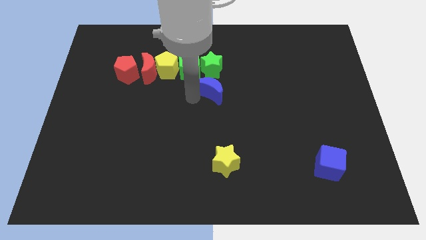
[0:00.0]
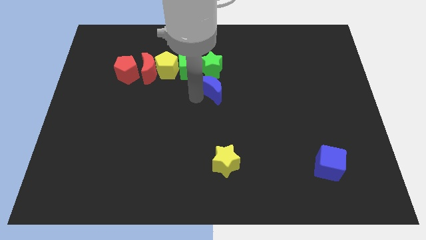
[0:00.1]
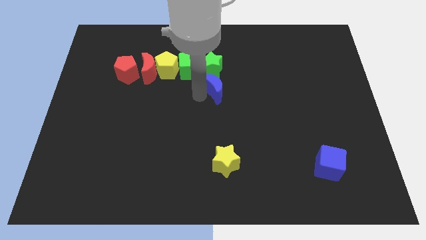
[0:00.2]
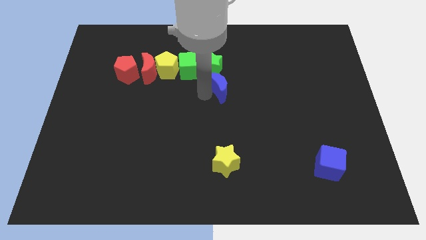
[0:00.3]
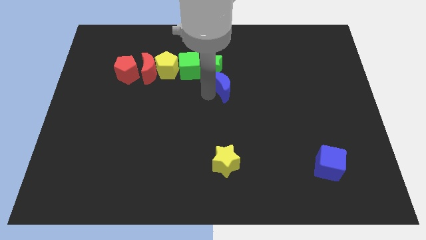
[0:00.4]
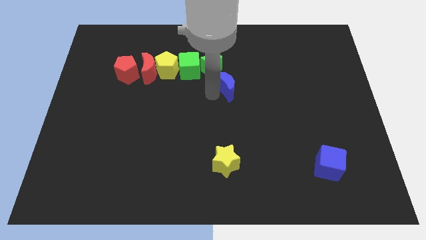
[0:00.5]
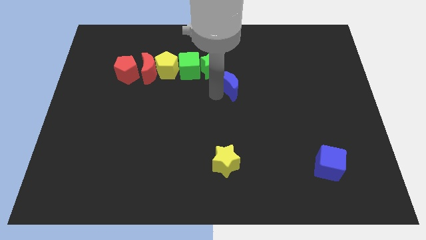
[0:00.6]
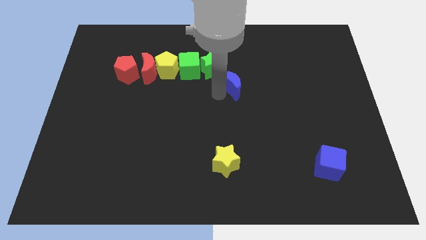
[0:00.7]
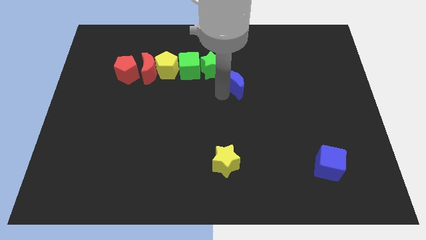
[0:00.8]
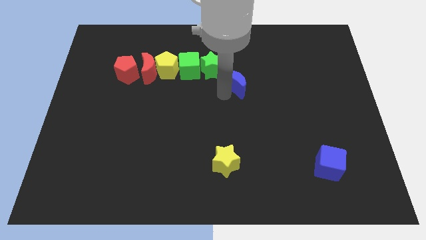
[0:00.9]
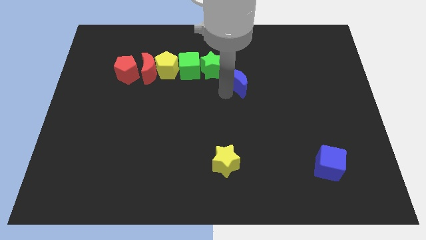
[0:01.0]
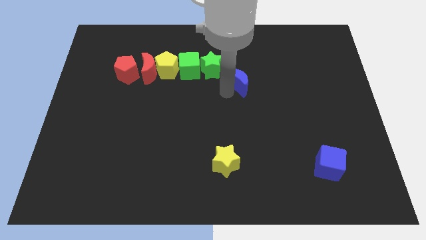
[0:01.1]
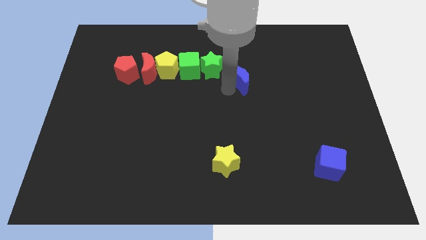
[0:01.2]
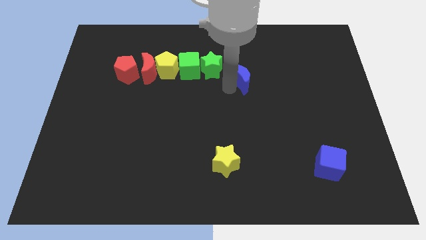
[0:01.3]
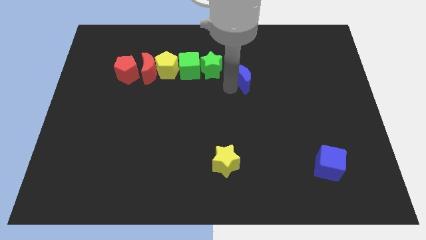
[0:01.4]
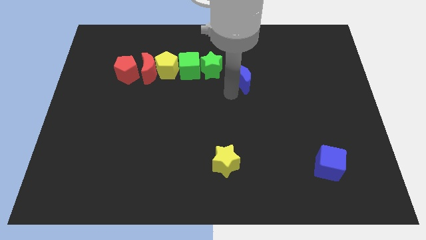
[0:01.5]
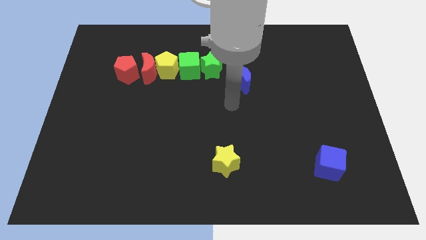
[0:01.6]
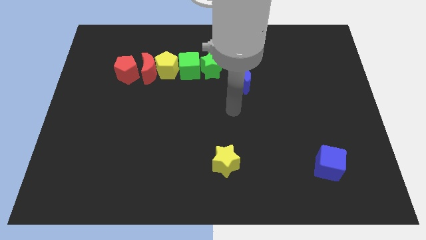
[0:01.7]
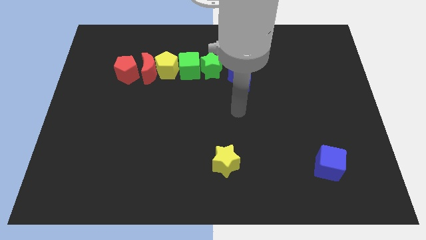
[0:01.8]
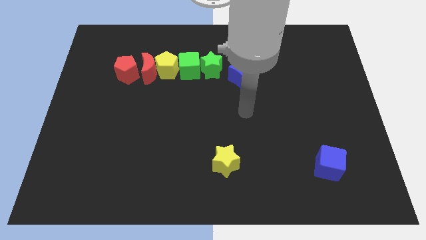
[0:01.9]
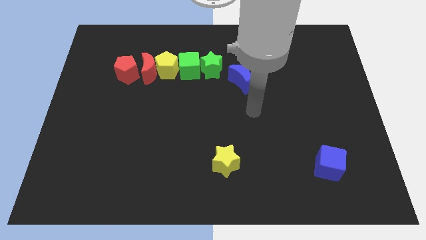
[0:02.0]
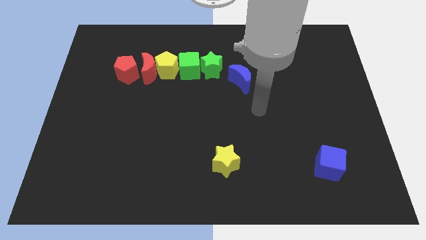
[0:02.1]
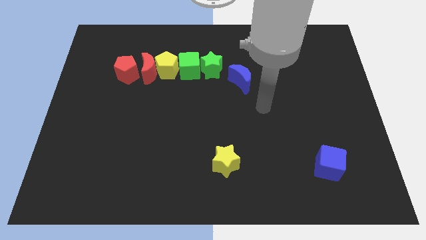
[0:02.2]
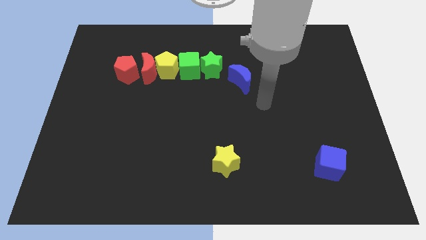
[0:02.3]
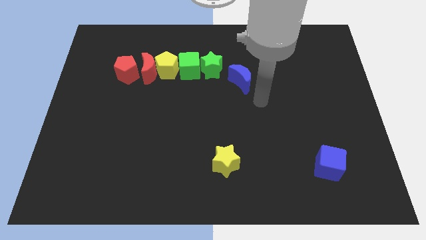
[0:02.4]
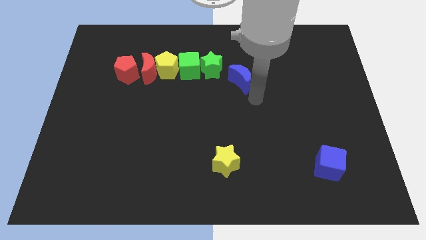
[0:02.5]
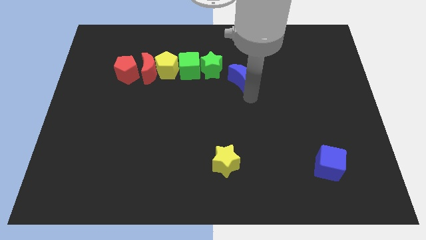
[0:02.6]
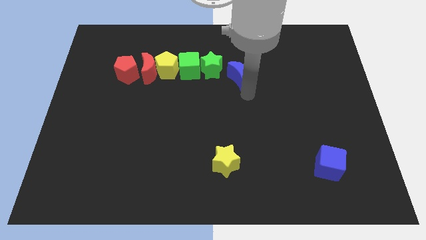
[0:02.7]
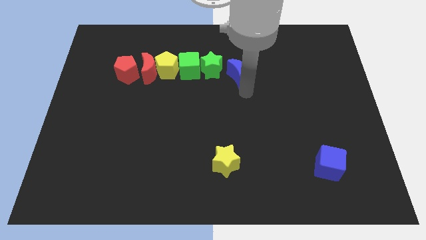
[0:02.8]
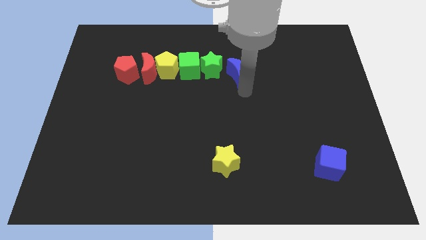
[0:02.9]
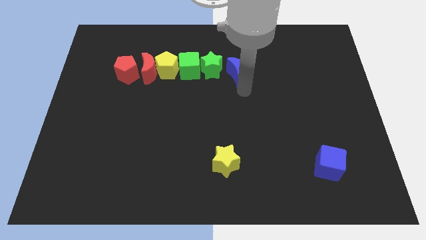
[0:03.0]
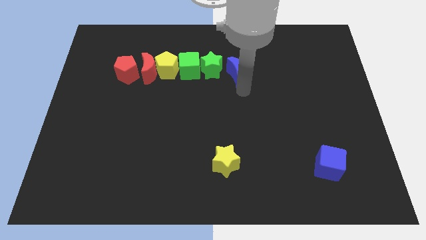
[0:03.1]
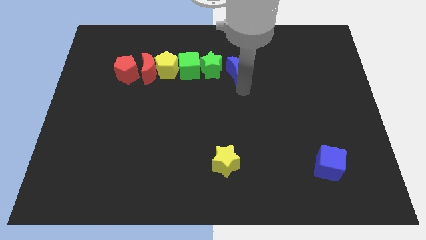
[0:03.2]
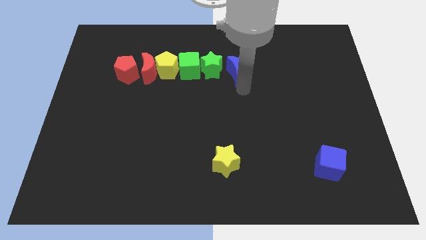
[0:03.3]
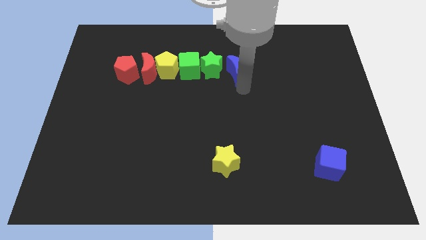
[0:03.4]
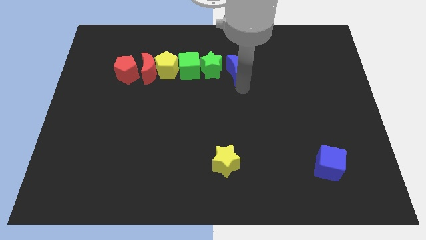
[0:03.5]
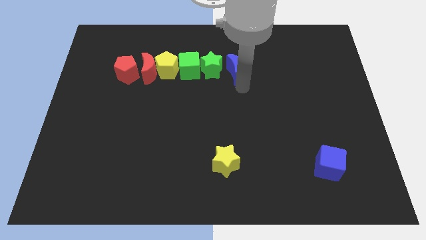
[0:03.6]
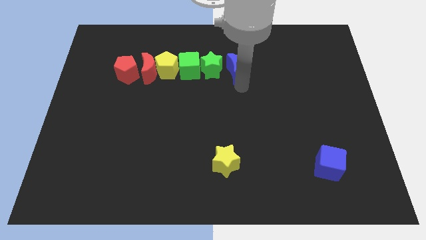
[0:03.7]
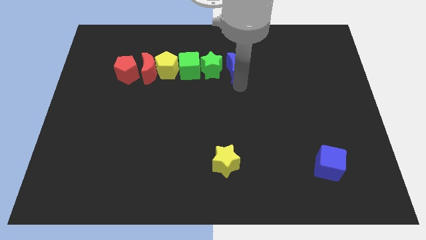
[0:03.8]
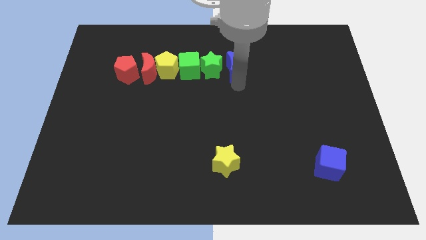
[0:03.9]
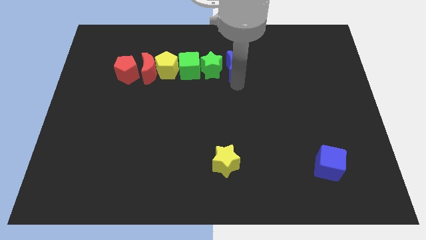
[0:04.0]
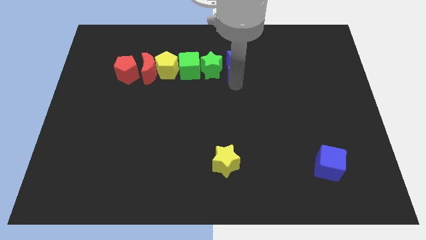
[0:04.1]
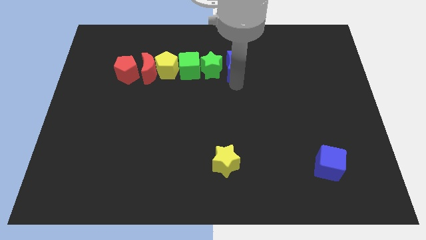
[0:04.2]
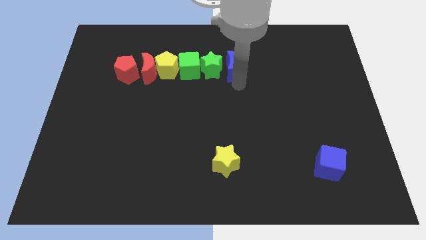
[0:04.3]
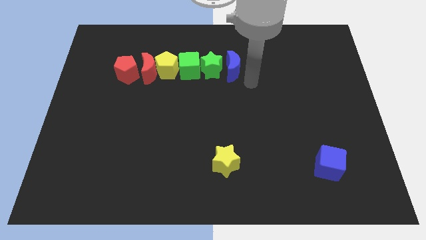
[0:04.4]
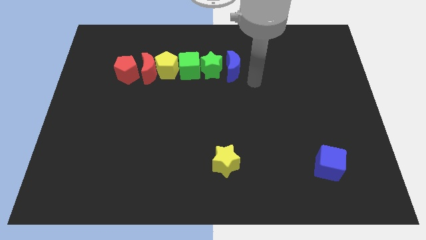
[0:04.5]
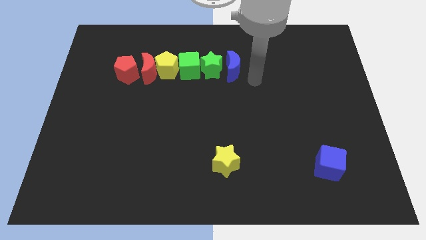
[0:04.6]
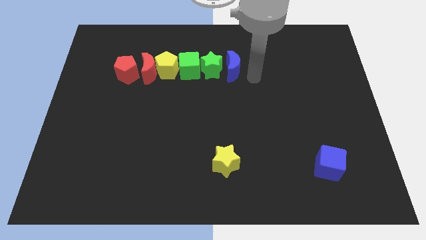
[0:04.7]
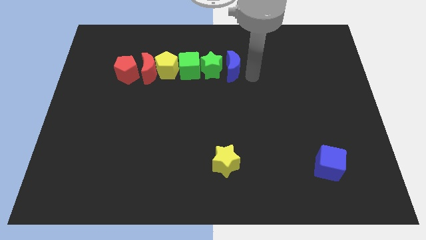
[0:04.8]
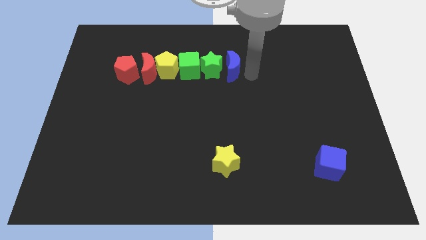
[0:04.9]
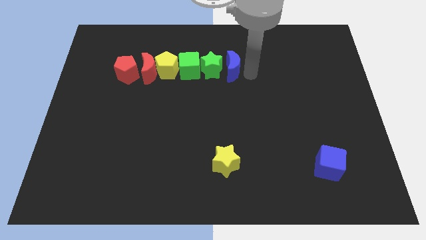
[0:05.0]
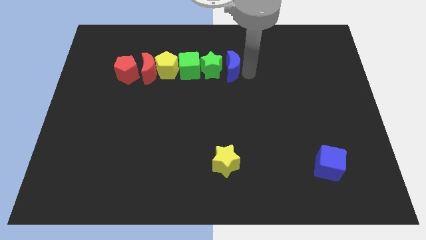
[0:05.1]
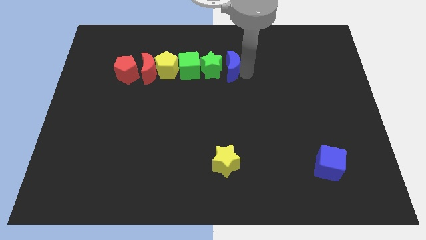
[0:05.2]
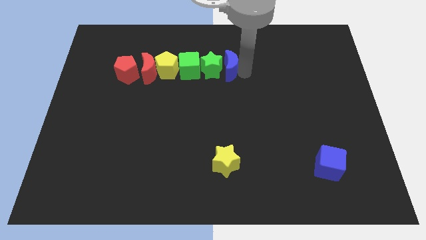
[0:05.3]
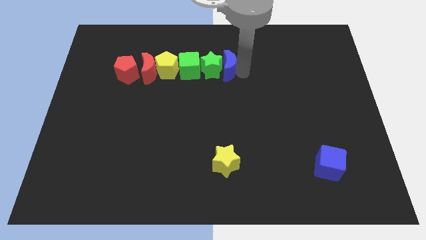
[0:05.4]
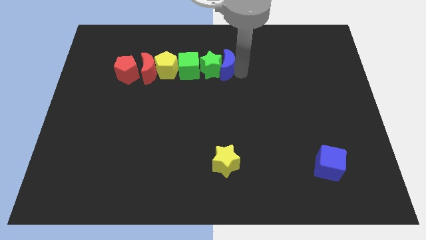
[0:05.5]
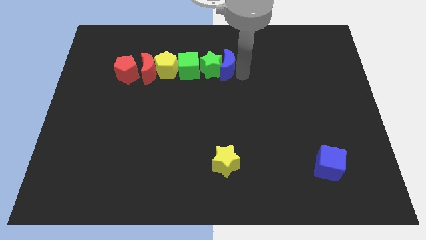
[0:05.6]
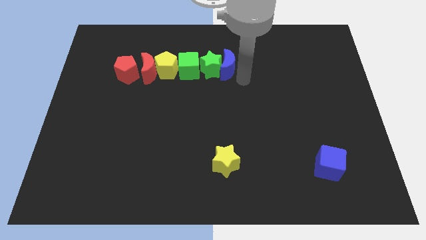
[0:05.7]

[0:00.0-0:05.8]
place the blue moon at the right side of the green star

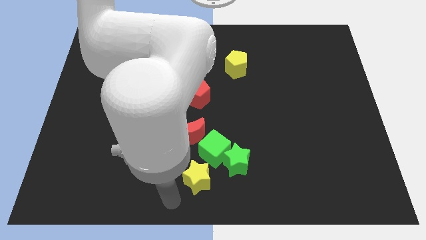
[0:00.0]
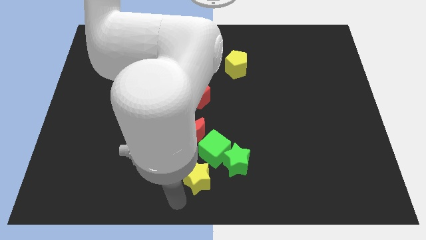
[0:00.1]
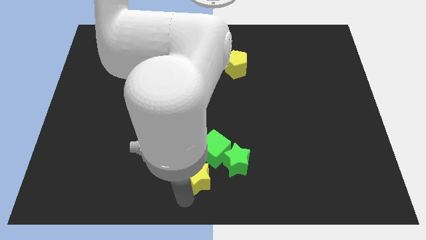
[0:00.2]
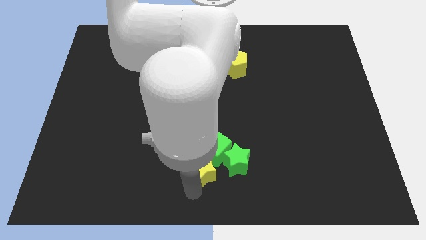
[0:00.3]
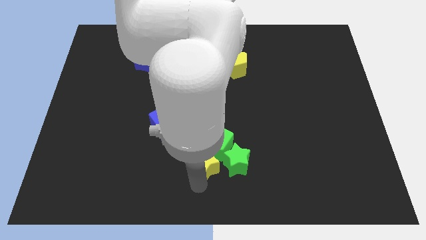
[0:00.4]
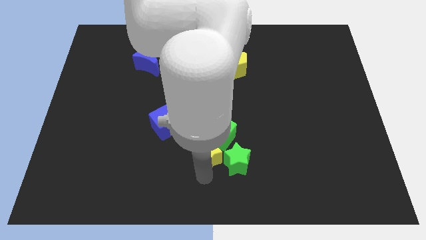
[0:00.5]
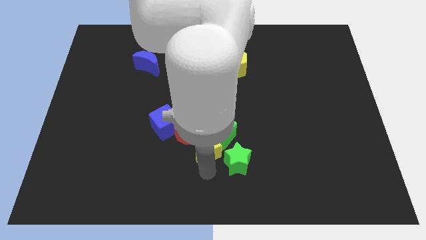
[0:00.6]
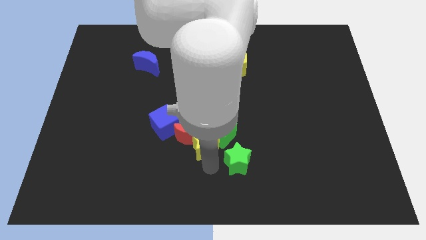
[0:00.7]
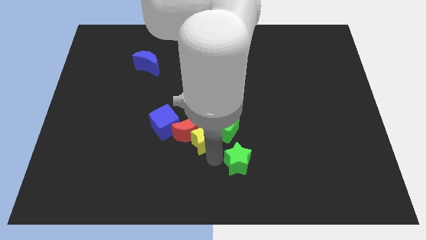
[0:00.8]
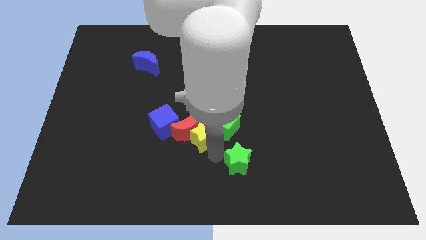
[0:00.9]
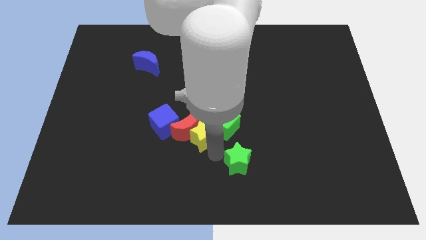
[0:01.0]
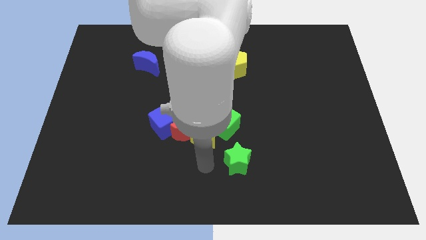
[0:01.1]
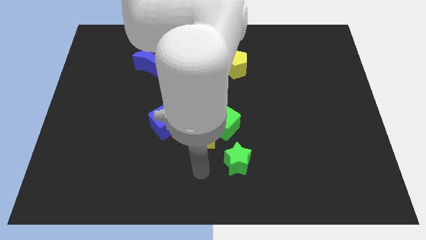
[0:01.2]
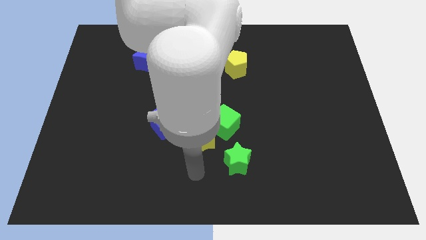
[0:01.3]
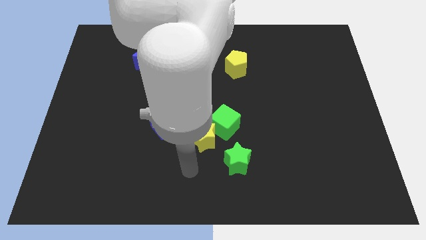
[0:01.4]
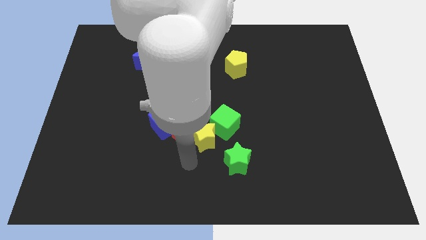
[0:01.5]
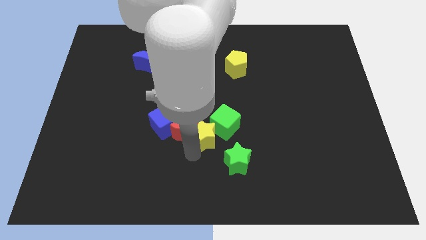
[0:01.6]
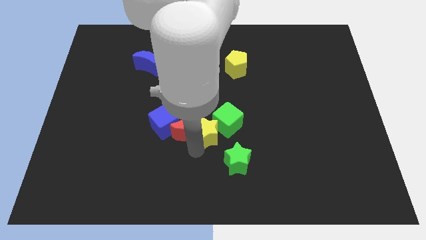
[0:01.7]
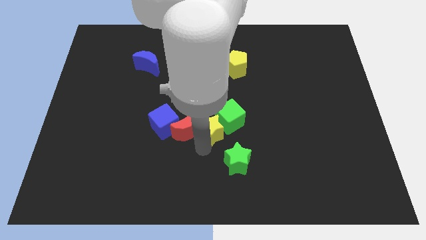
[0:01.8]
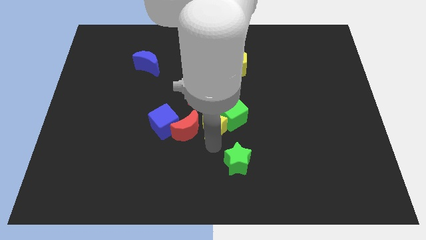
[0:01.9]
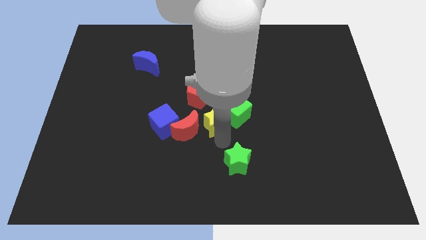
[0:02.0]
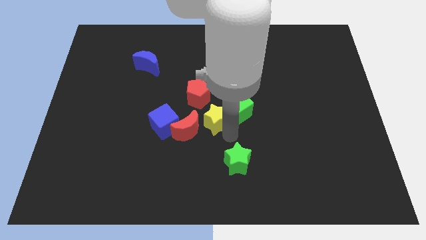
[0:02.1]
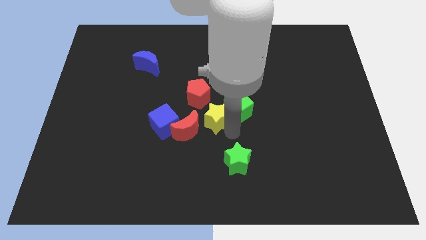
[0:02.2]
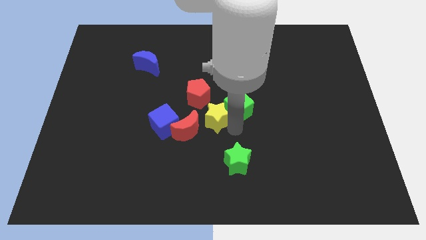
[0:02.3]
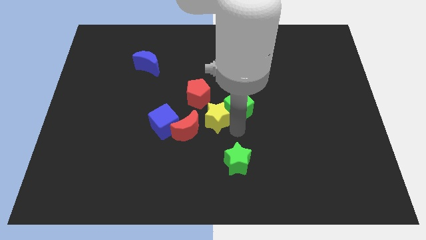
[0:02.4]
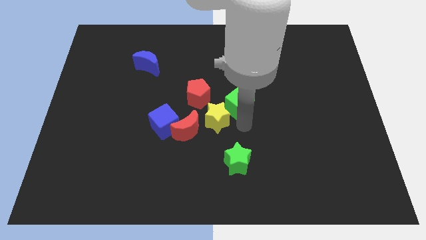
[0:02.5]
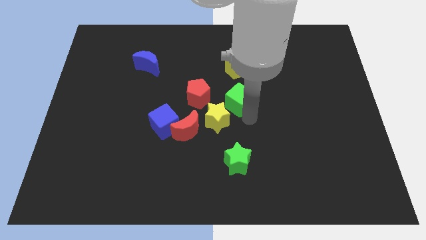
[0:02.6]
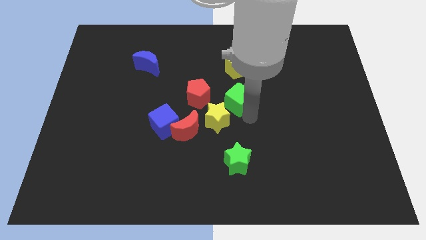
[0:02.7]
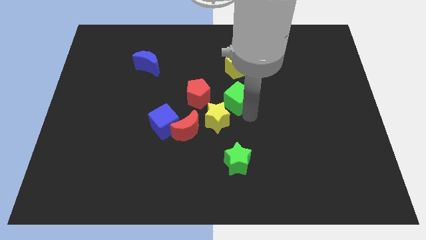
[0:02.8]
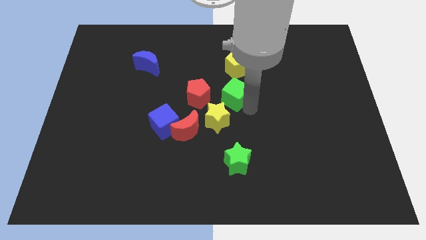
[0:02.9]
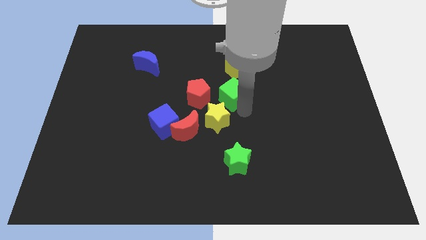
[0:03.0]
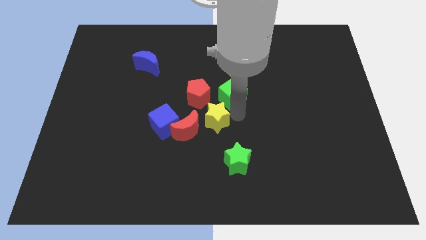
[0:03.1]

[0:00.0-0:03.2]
slide the green cube and yellow star together to the top side of the board

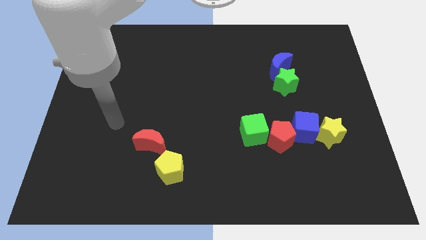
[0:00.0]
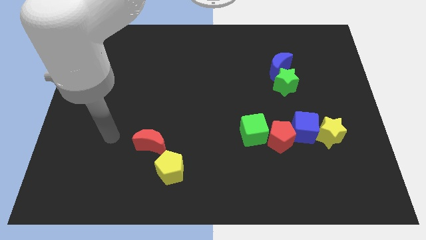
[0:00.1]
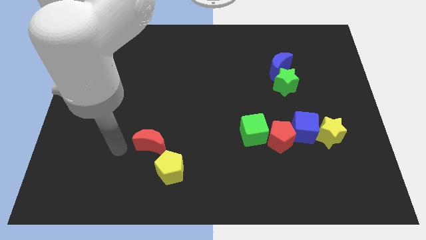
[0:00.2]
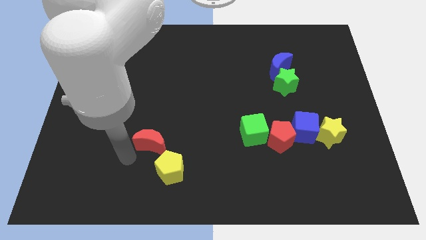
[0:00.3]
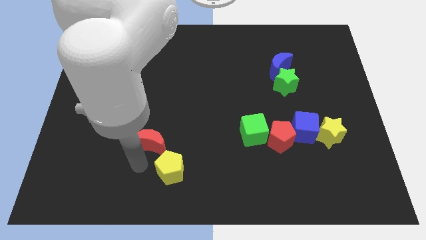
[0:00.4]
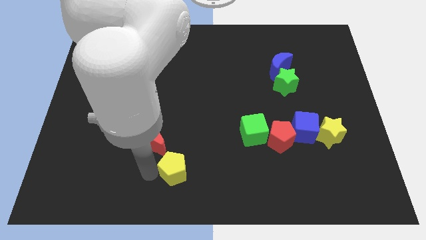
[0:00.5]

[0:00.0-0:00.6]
place the arm left to the yellow pentagon
